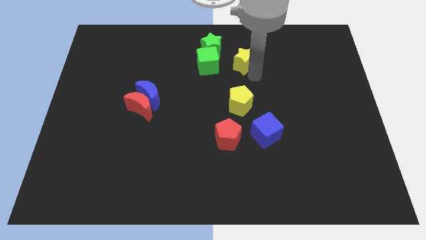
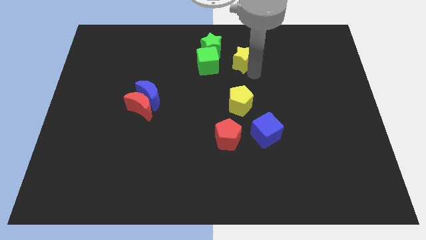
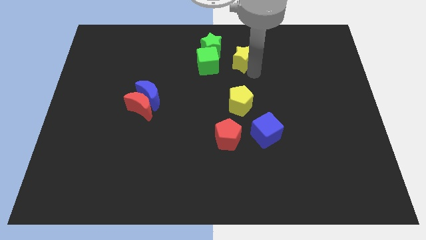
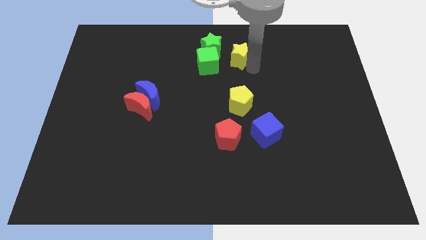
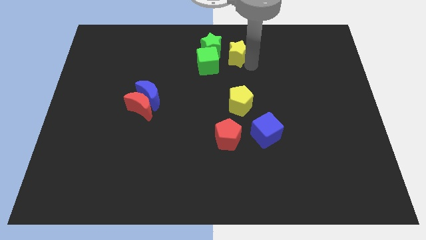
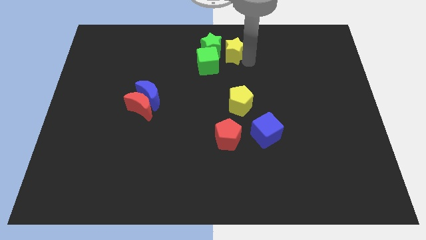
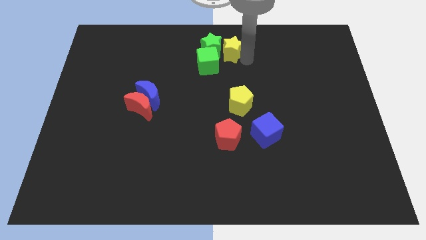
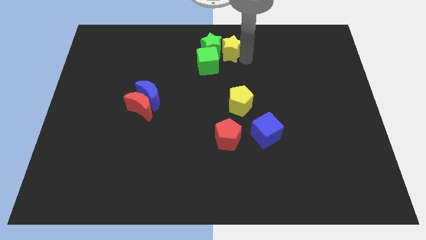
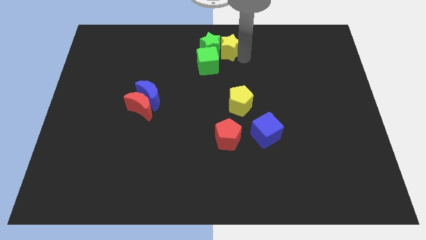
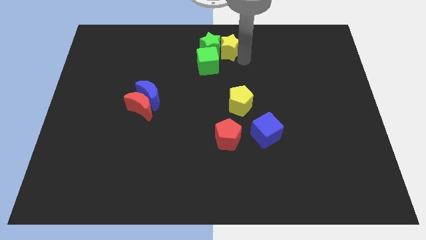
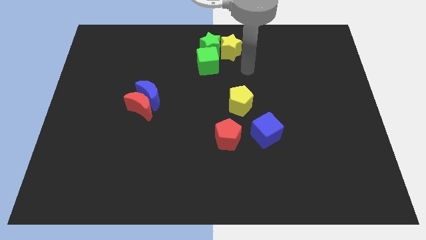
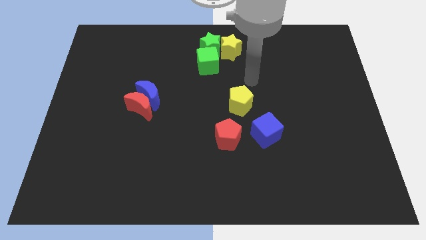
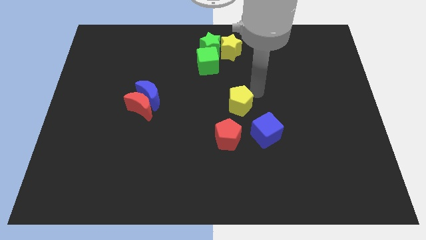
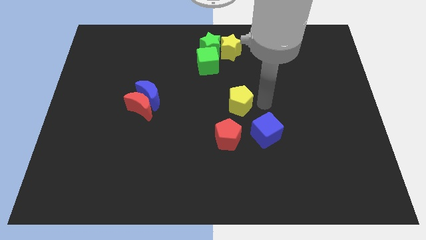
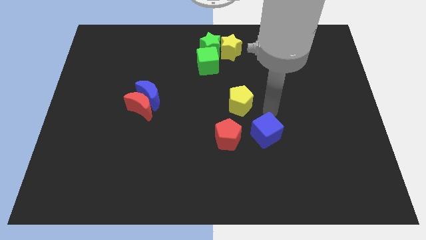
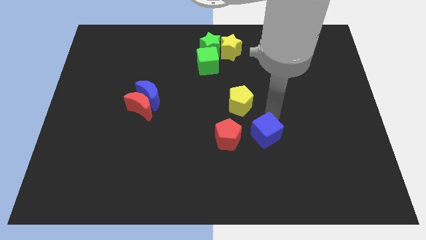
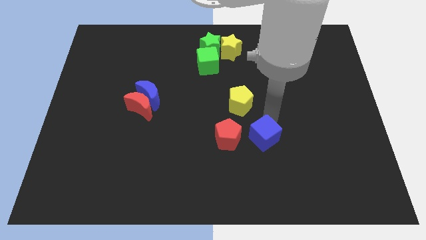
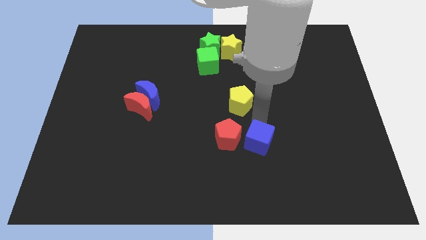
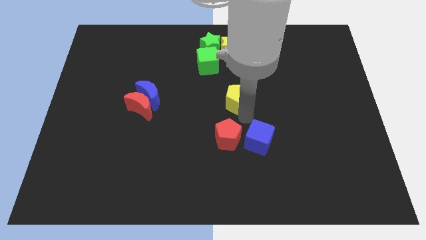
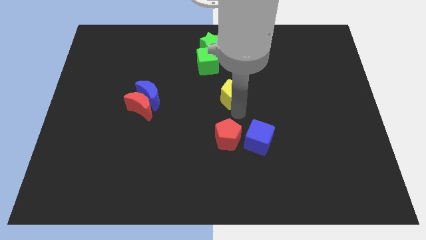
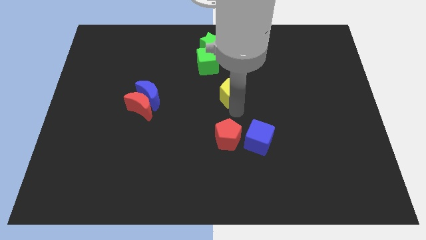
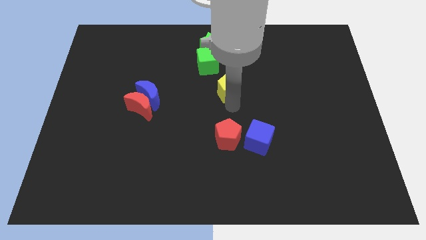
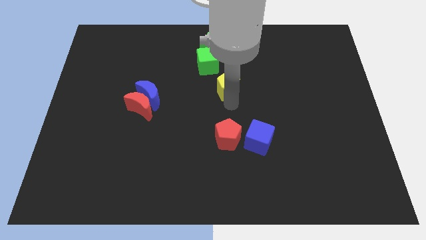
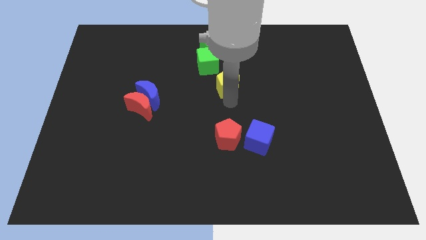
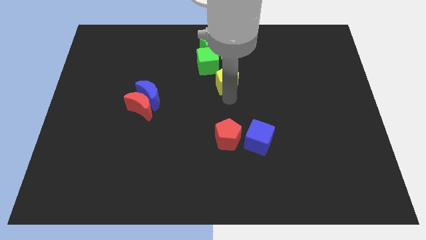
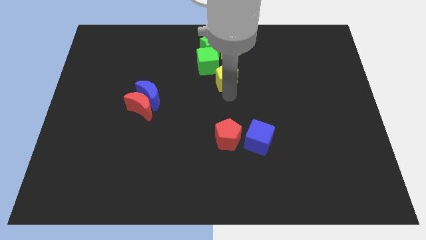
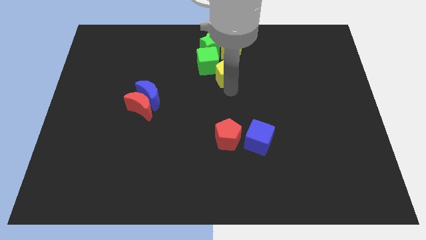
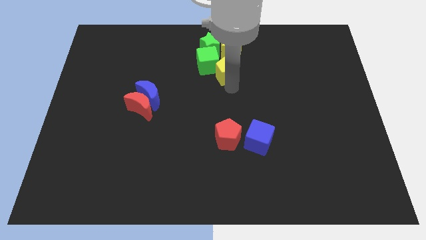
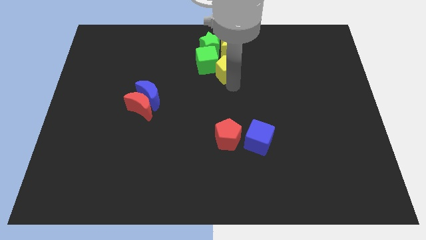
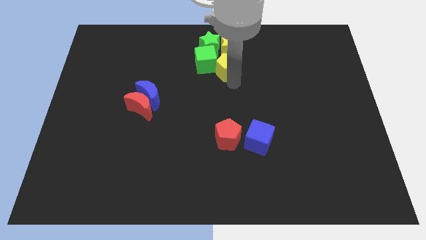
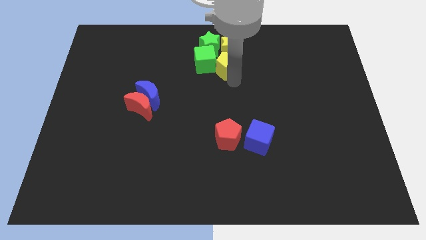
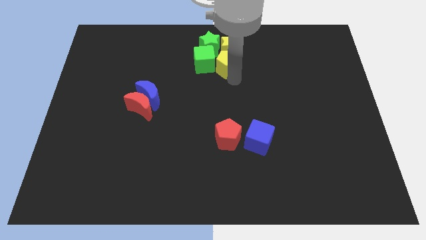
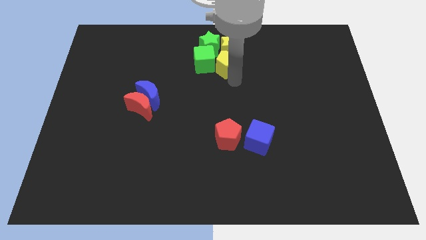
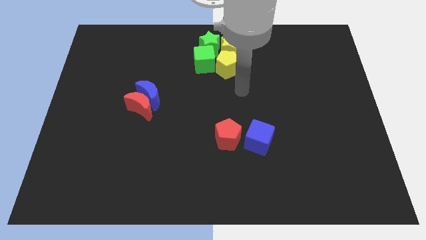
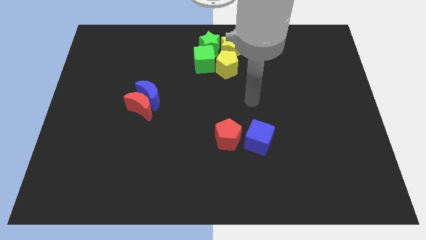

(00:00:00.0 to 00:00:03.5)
push yellow pentagon into yellow star

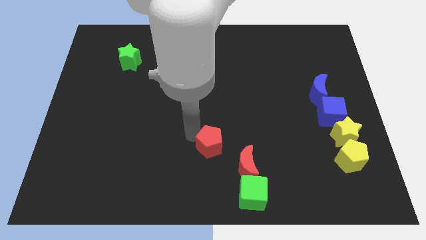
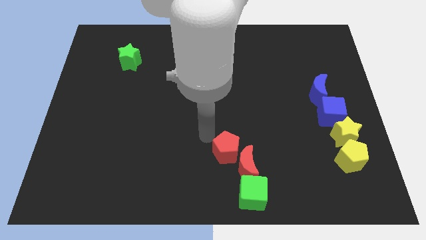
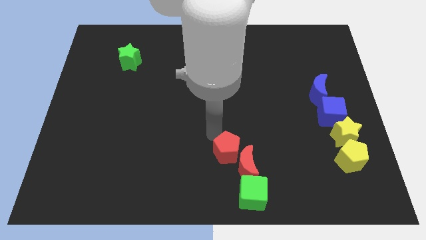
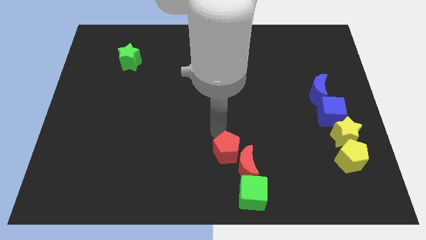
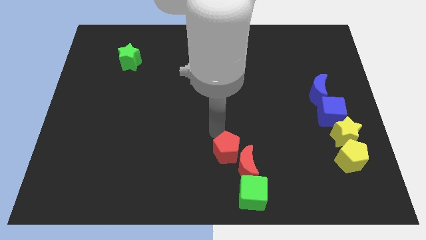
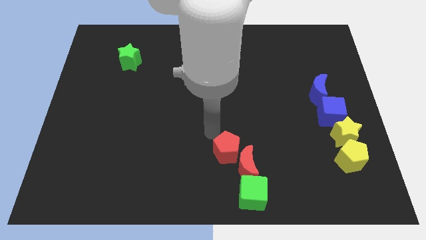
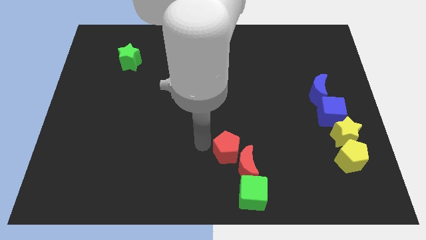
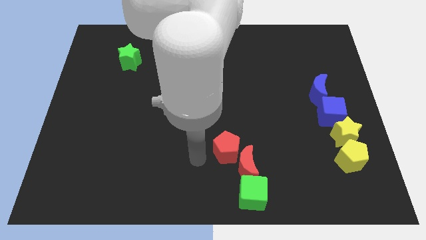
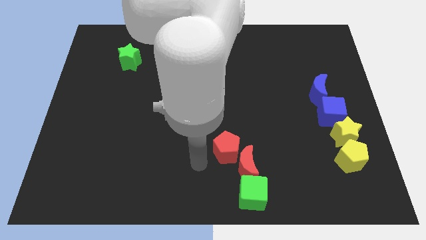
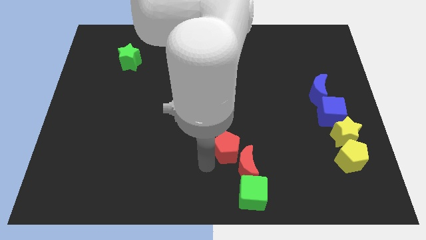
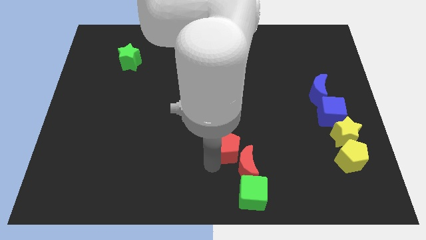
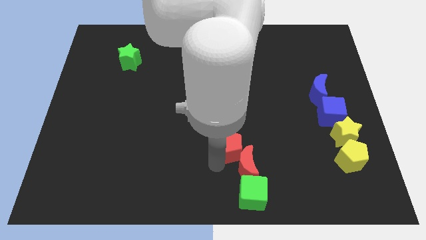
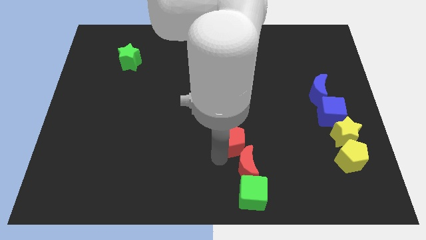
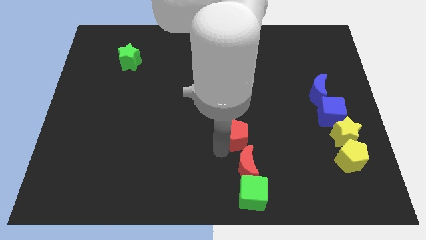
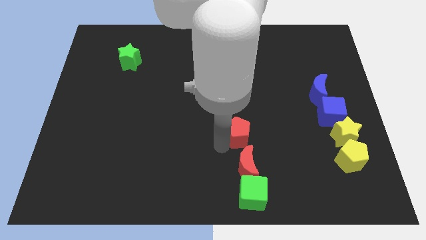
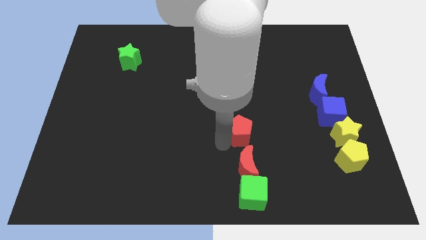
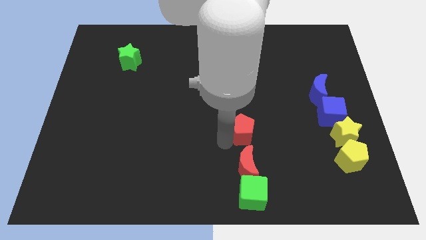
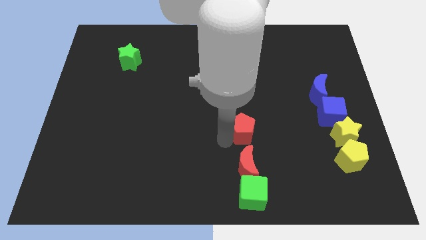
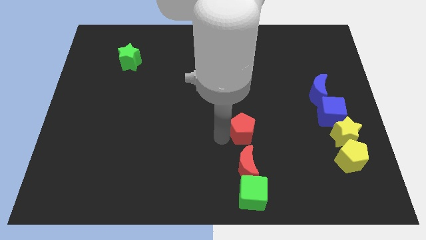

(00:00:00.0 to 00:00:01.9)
place the red pentagon above the red crescent

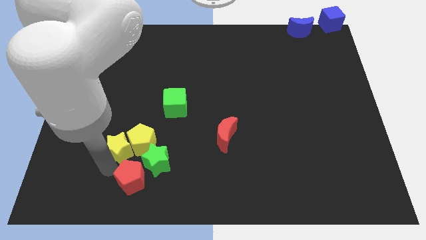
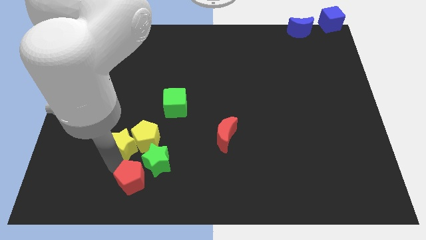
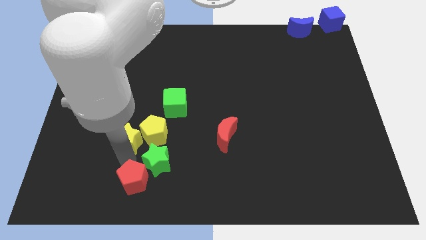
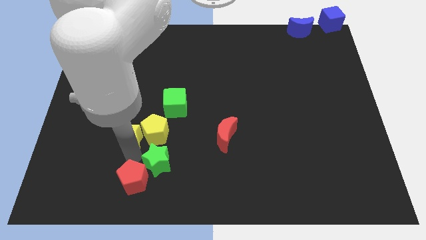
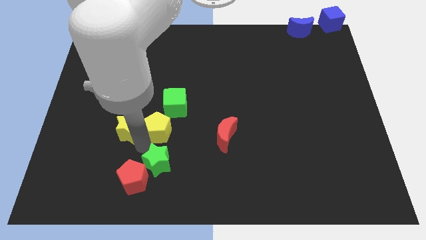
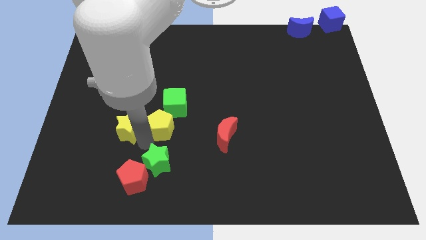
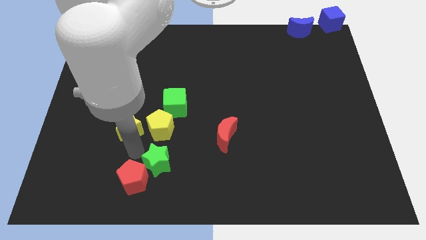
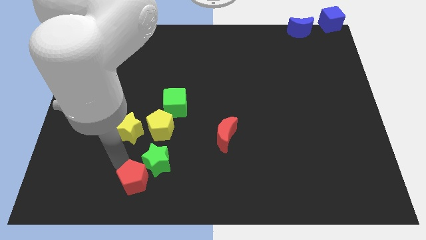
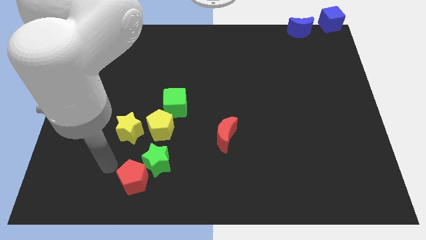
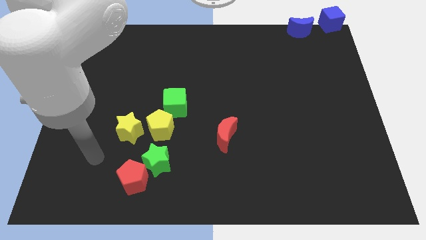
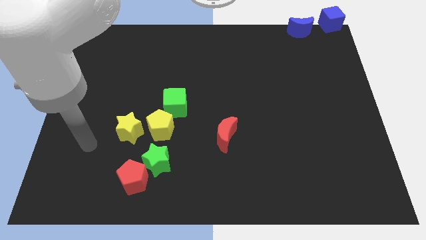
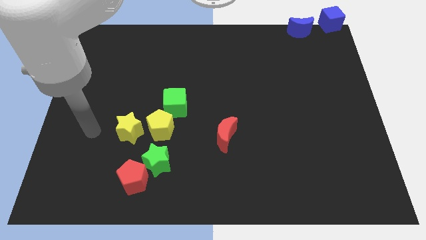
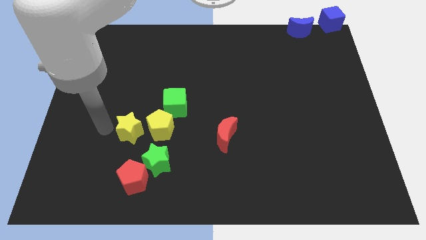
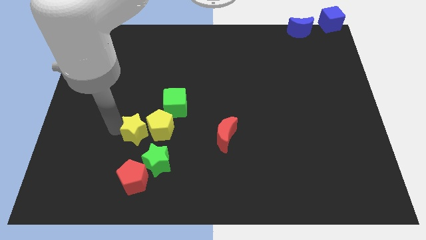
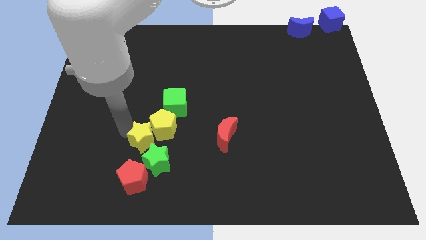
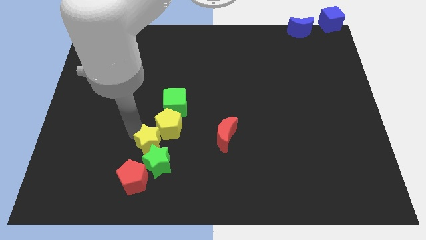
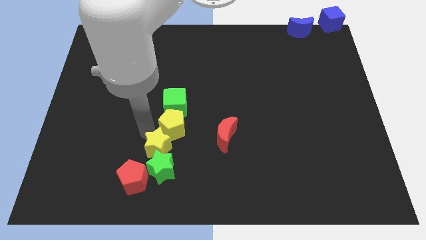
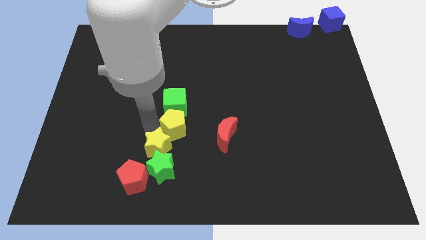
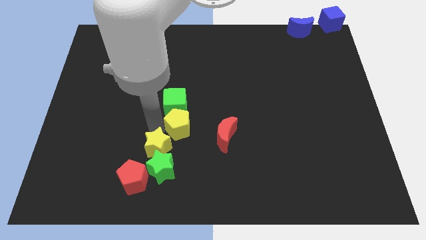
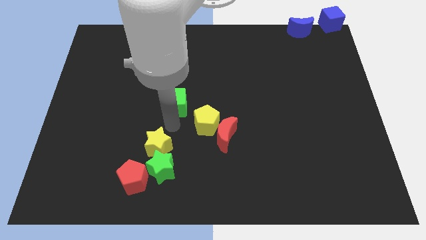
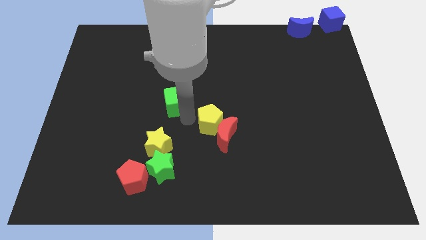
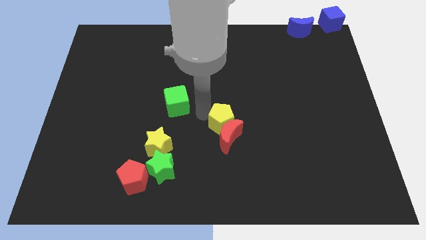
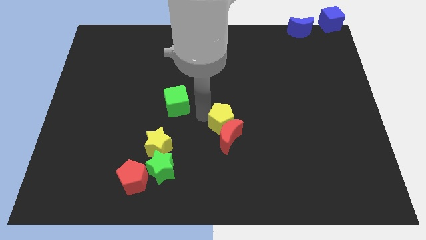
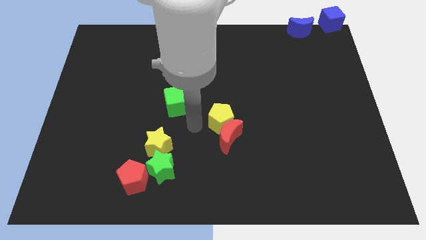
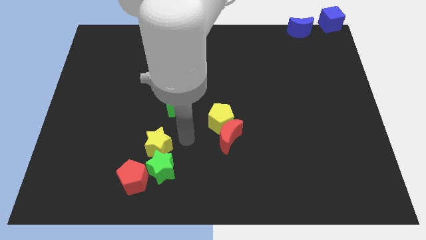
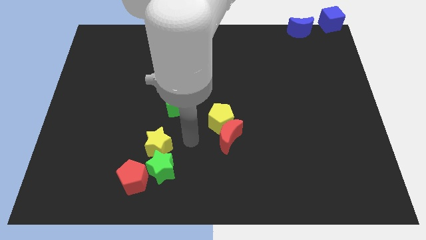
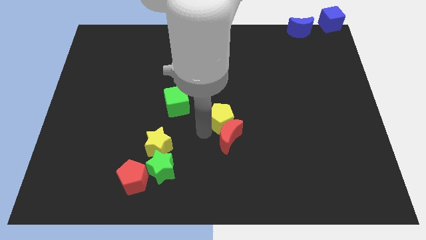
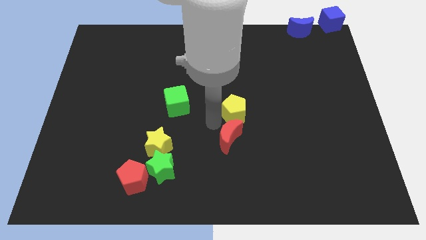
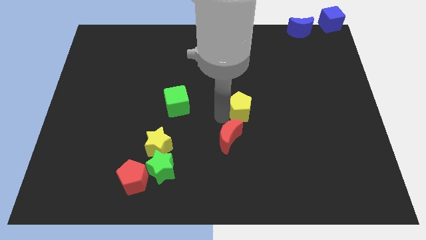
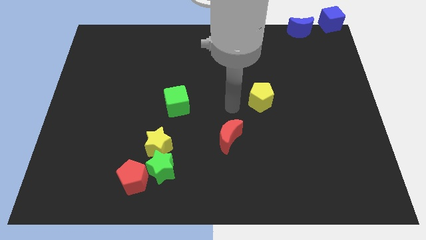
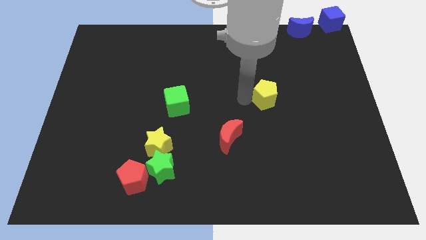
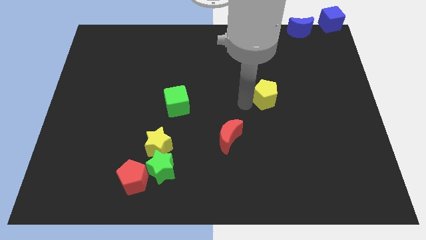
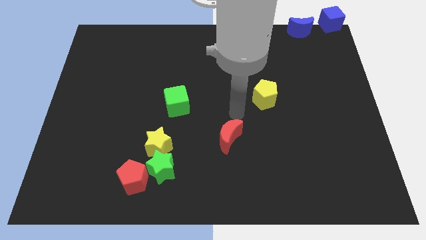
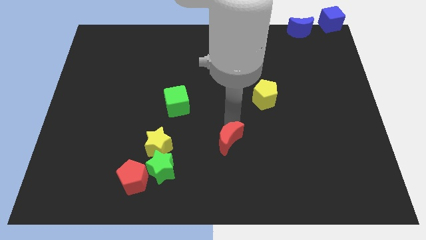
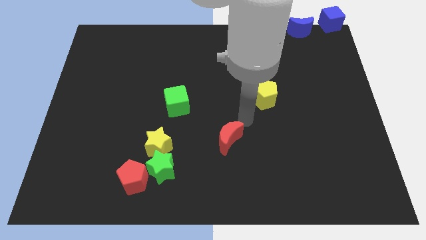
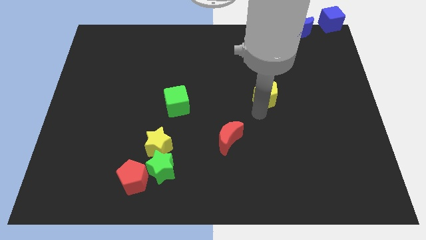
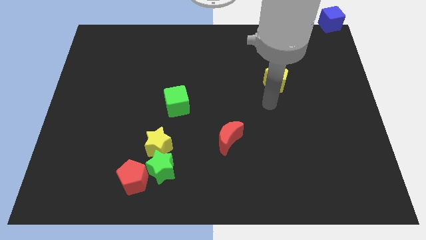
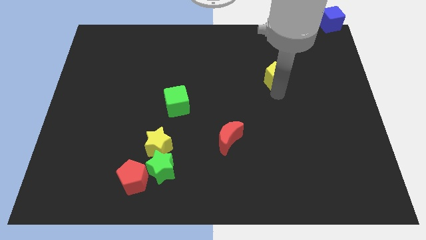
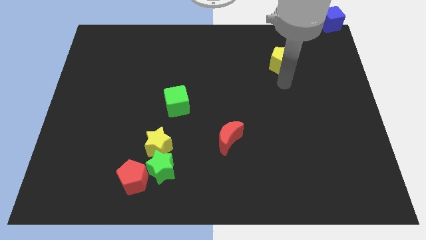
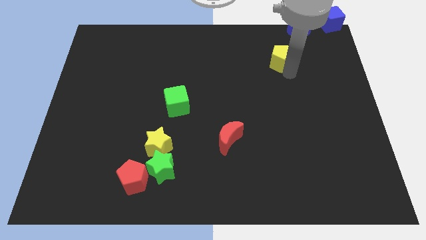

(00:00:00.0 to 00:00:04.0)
separate the yellow star and the yellow pentagon
